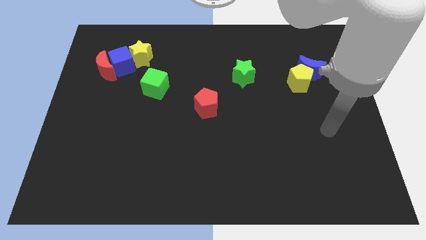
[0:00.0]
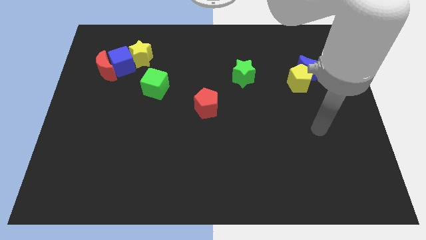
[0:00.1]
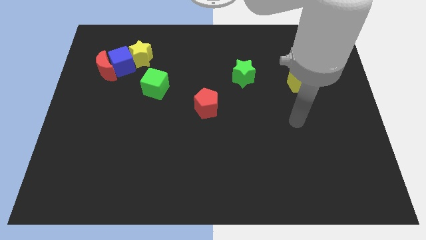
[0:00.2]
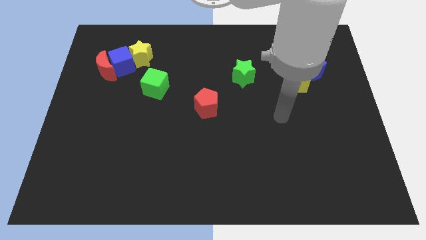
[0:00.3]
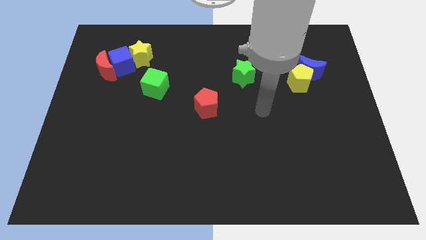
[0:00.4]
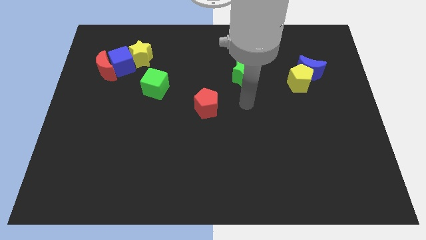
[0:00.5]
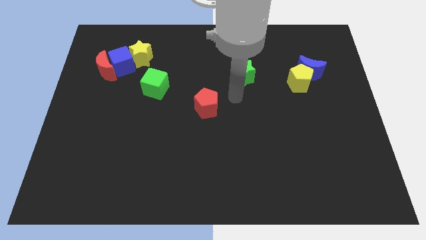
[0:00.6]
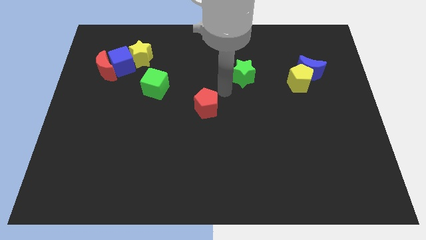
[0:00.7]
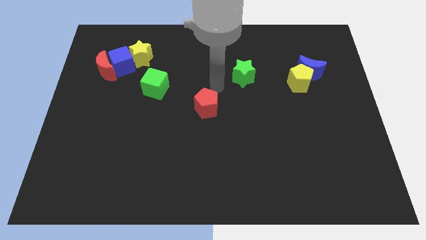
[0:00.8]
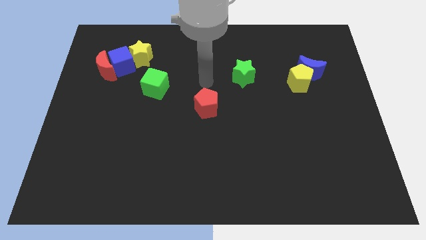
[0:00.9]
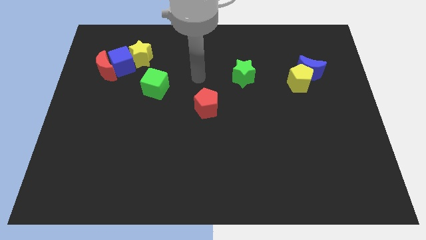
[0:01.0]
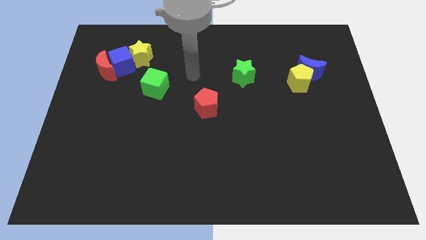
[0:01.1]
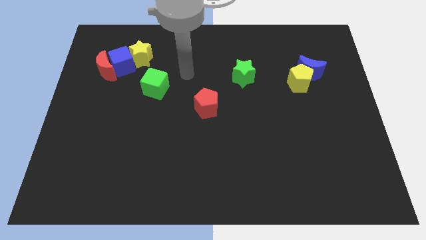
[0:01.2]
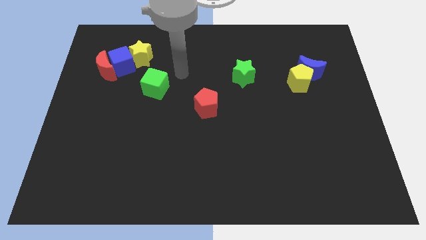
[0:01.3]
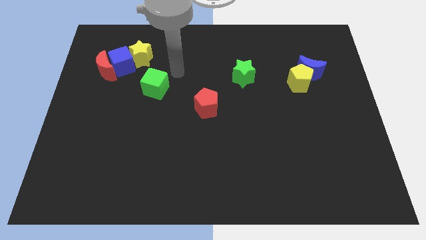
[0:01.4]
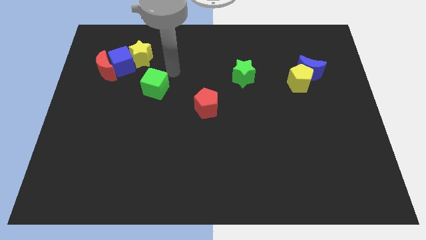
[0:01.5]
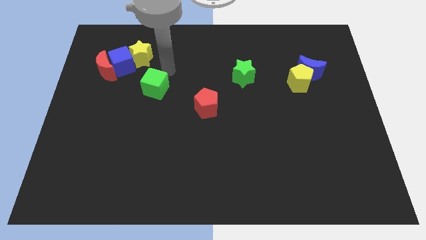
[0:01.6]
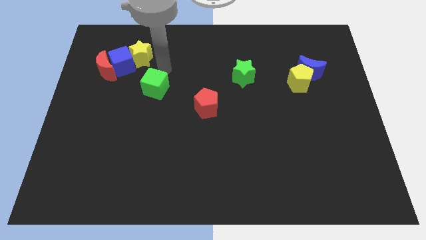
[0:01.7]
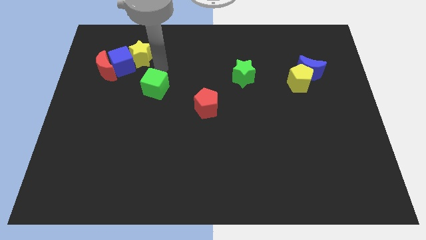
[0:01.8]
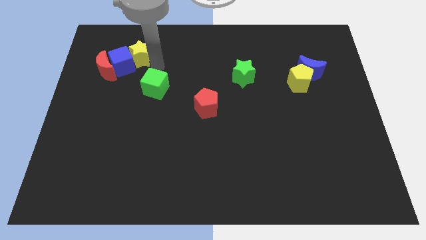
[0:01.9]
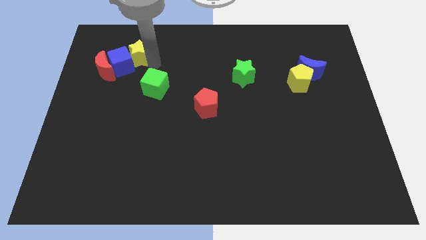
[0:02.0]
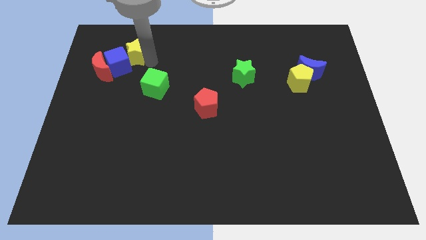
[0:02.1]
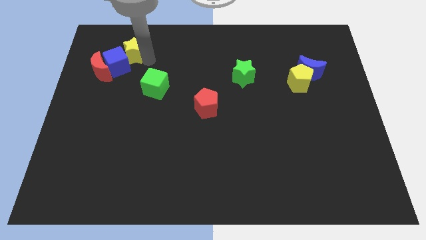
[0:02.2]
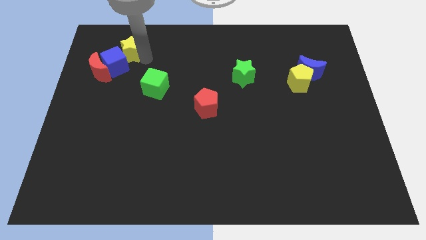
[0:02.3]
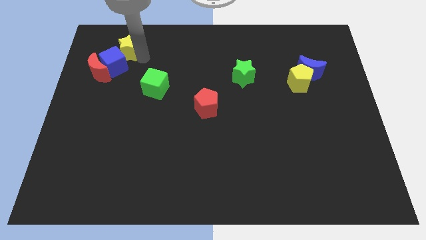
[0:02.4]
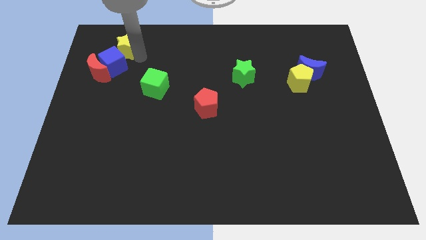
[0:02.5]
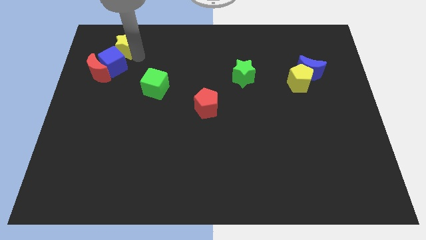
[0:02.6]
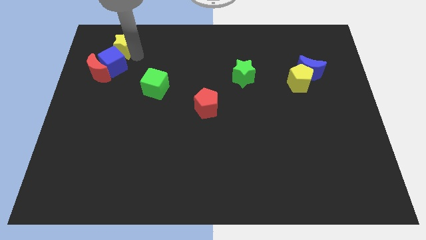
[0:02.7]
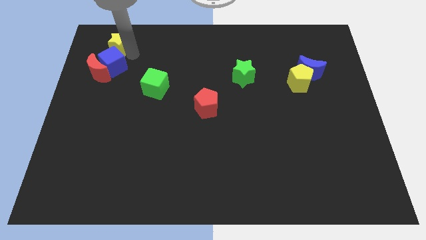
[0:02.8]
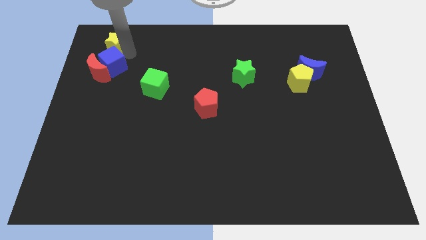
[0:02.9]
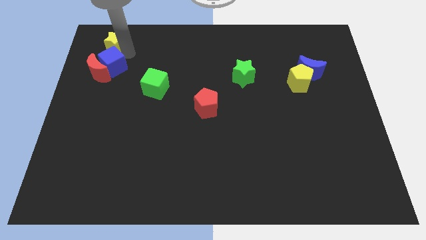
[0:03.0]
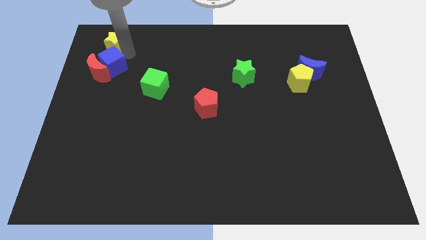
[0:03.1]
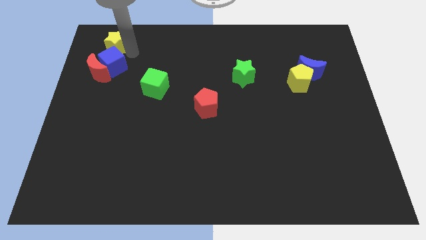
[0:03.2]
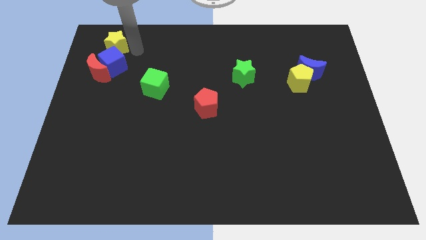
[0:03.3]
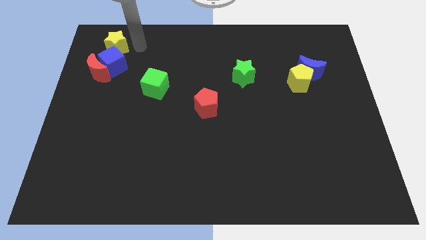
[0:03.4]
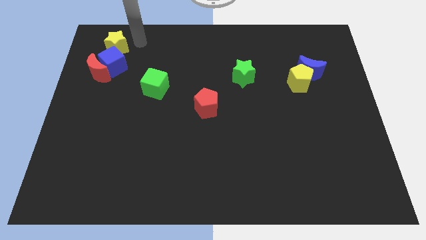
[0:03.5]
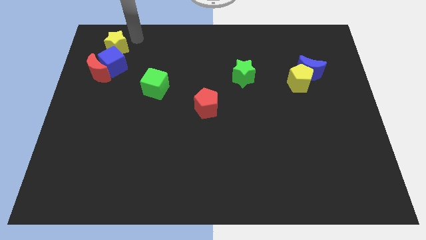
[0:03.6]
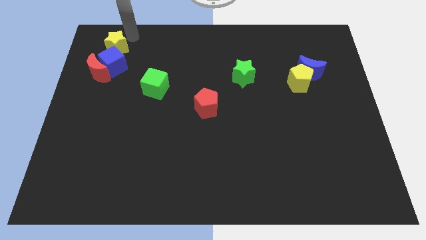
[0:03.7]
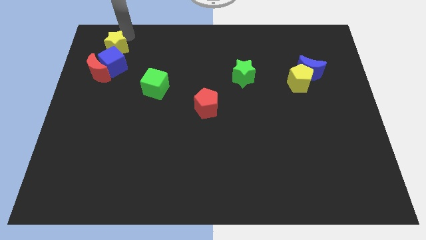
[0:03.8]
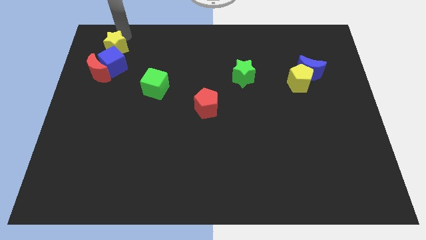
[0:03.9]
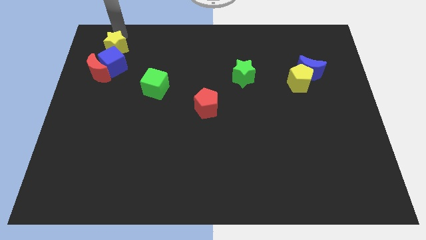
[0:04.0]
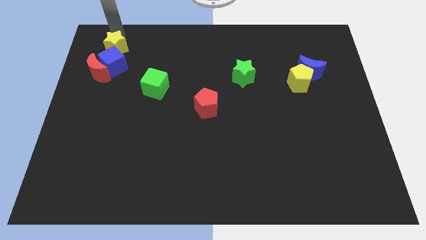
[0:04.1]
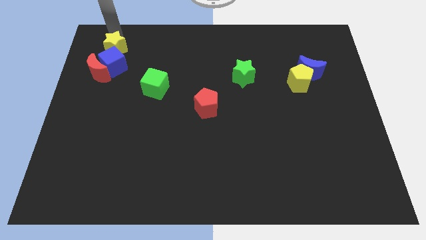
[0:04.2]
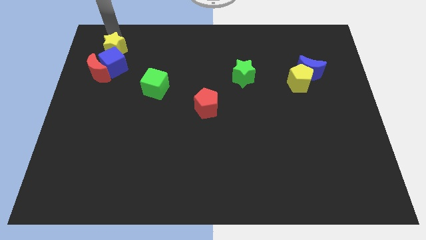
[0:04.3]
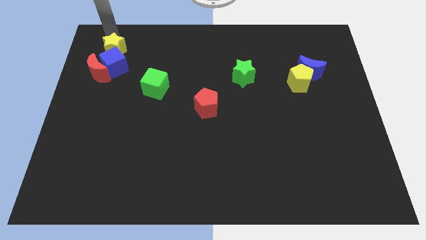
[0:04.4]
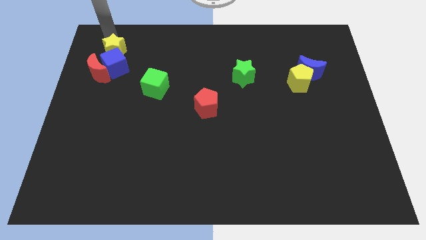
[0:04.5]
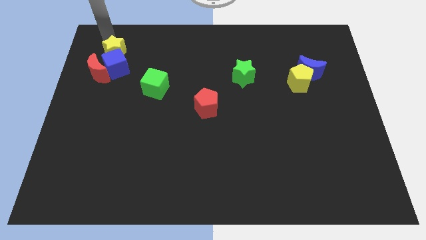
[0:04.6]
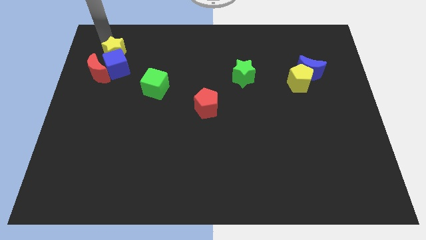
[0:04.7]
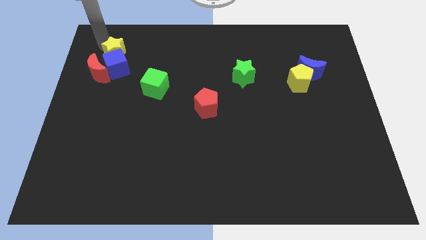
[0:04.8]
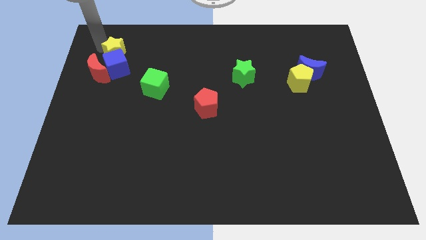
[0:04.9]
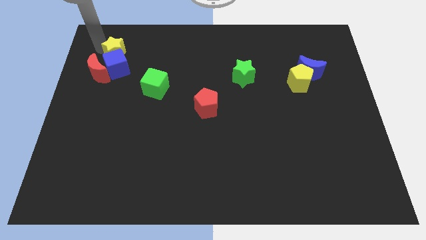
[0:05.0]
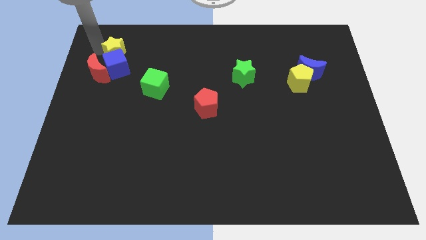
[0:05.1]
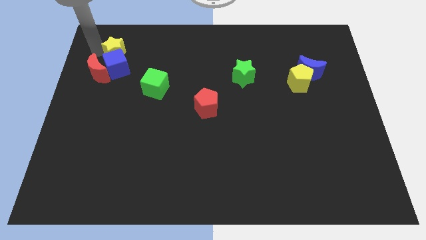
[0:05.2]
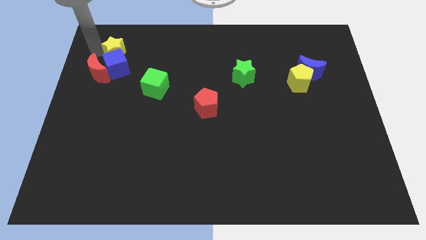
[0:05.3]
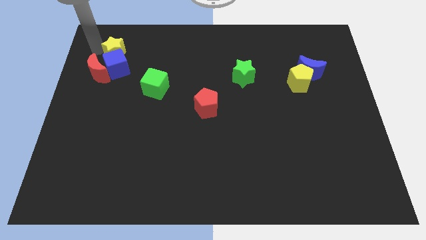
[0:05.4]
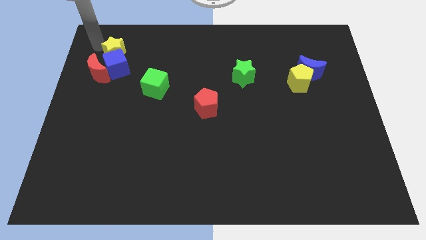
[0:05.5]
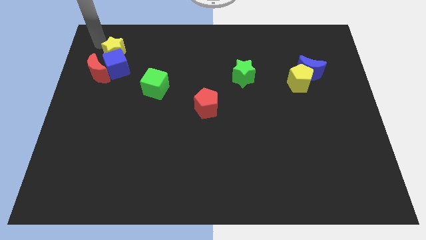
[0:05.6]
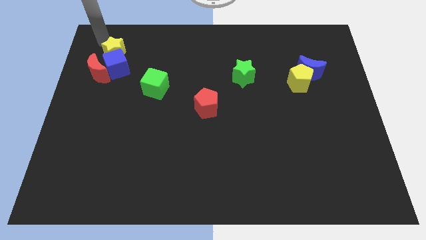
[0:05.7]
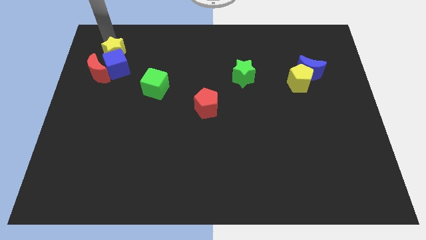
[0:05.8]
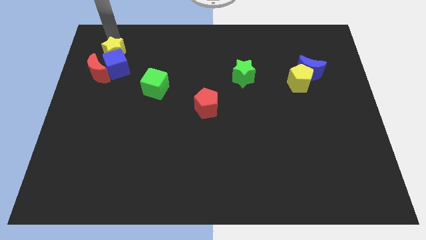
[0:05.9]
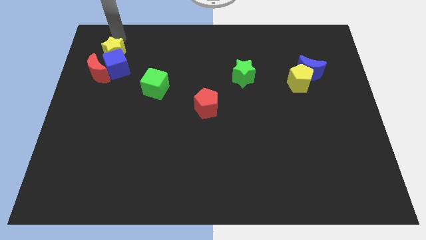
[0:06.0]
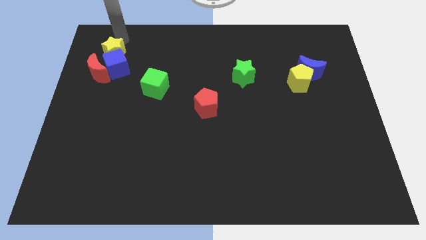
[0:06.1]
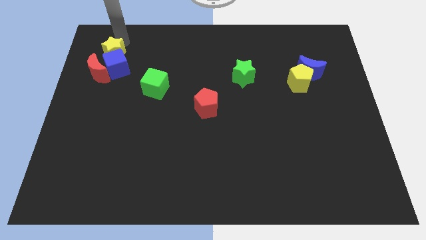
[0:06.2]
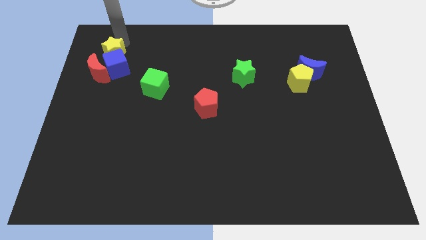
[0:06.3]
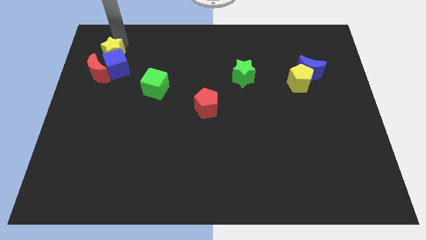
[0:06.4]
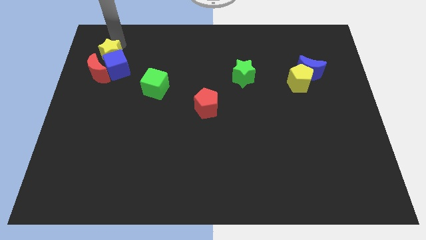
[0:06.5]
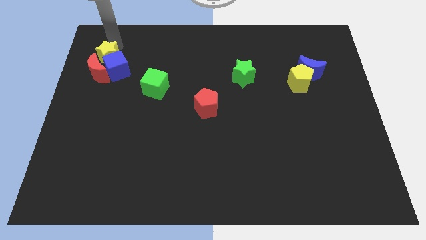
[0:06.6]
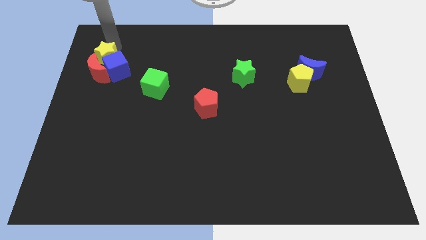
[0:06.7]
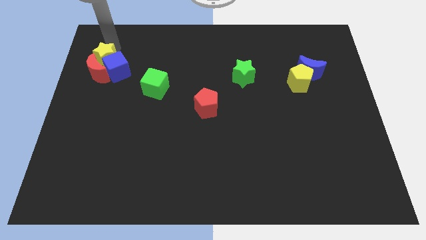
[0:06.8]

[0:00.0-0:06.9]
move the yellow star next to the red moon

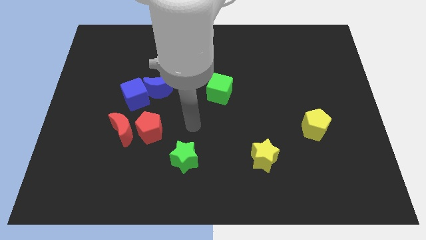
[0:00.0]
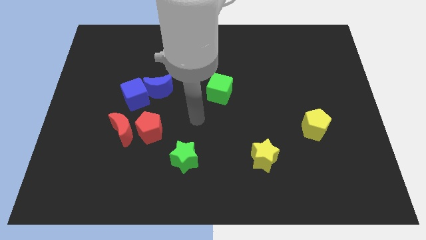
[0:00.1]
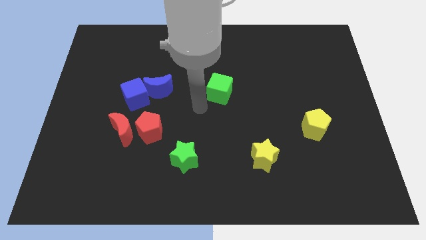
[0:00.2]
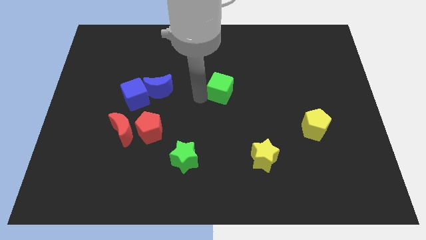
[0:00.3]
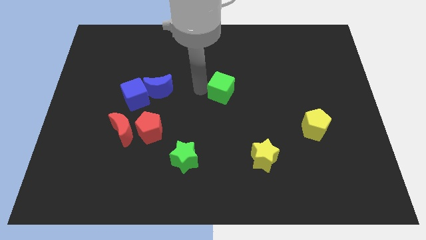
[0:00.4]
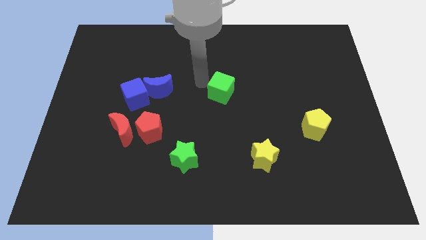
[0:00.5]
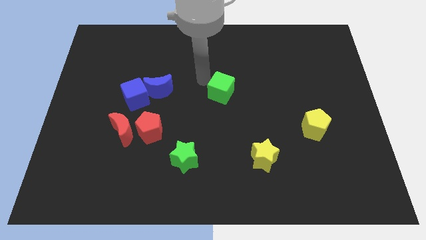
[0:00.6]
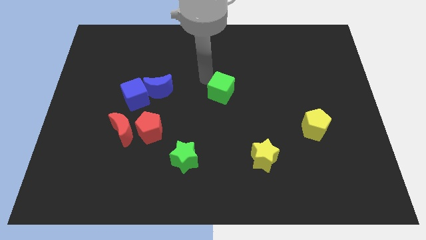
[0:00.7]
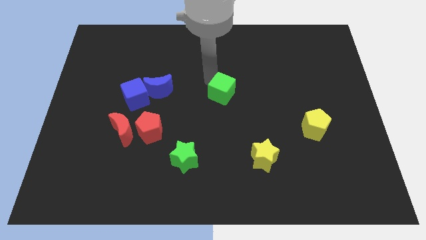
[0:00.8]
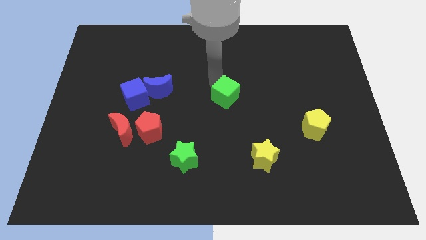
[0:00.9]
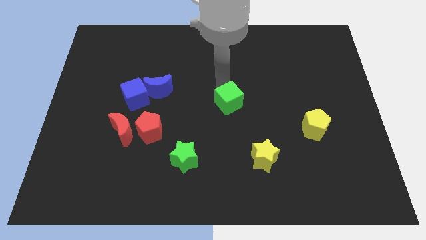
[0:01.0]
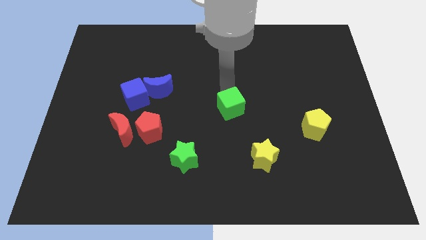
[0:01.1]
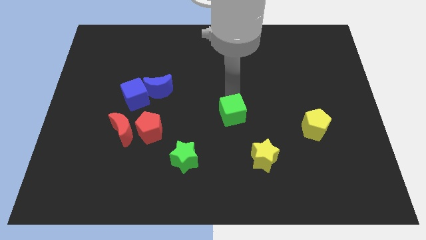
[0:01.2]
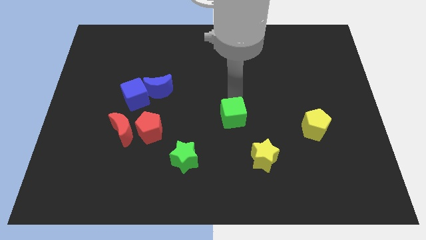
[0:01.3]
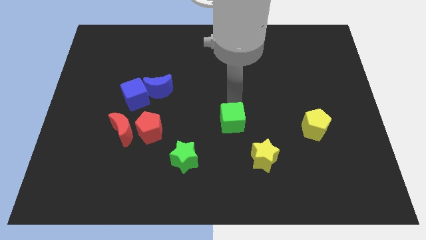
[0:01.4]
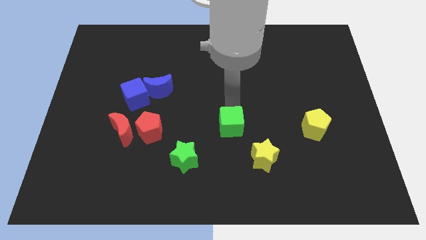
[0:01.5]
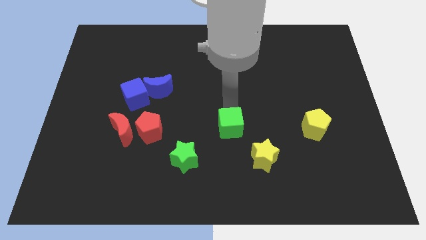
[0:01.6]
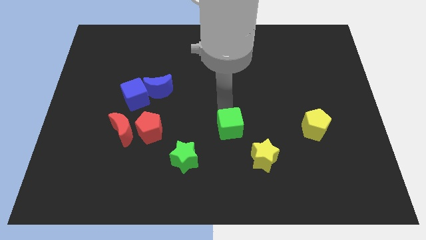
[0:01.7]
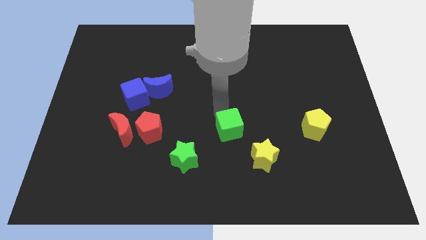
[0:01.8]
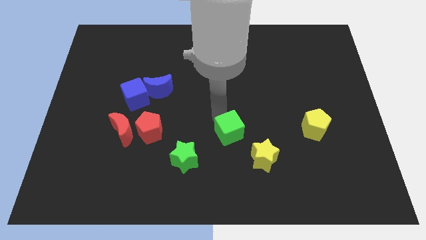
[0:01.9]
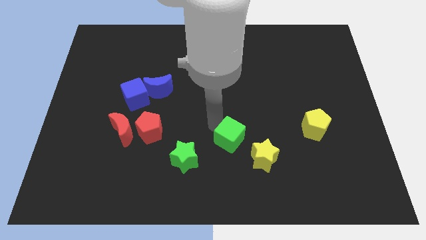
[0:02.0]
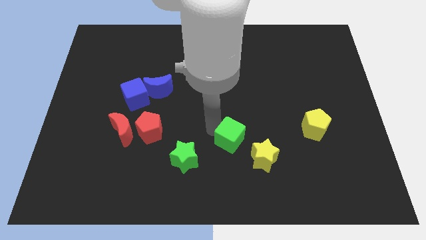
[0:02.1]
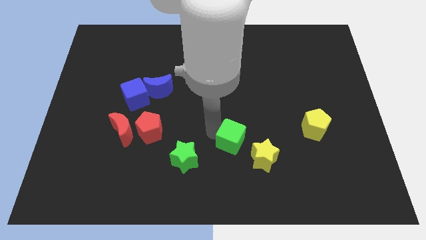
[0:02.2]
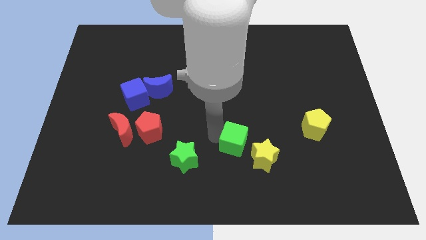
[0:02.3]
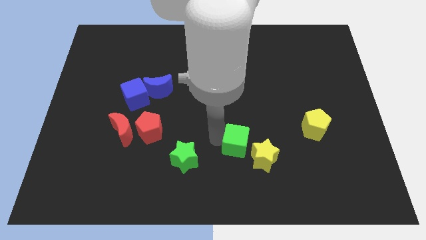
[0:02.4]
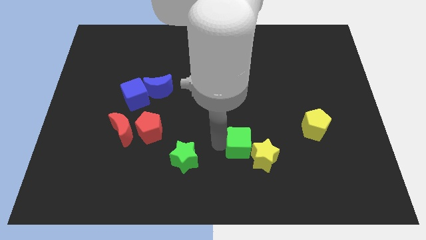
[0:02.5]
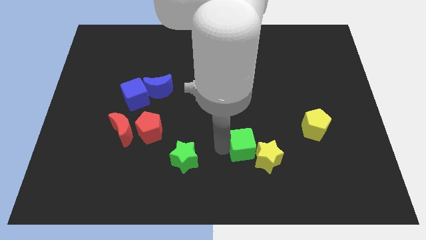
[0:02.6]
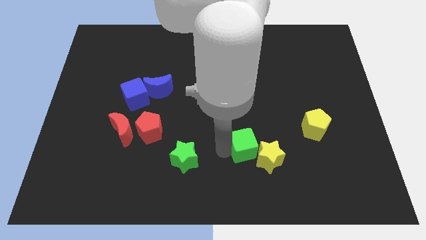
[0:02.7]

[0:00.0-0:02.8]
slide the green cube next to the yellow star
